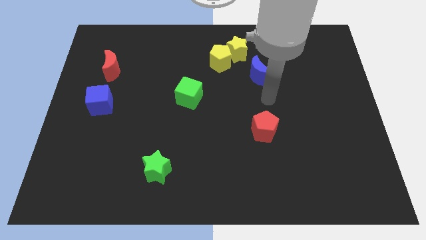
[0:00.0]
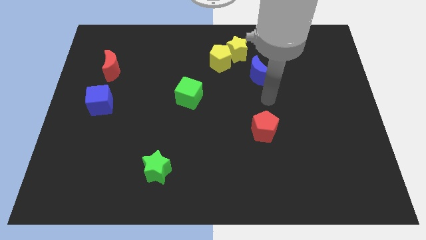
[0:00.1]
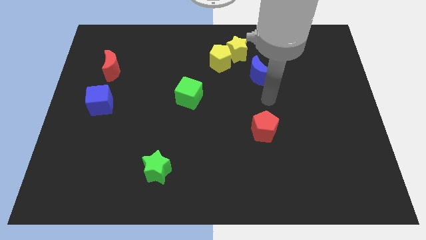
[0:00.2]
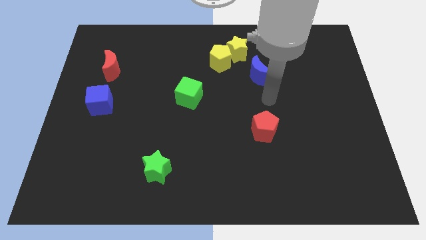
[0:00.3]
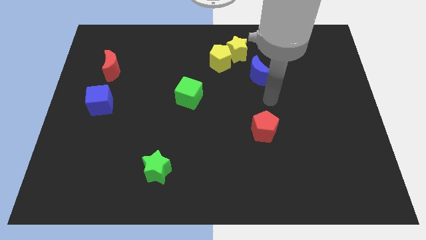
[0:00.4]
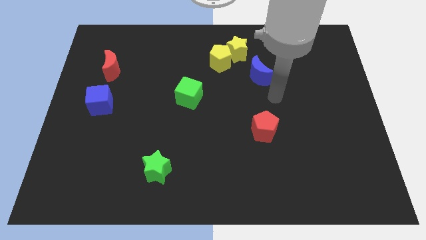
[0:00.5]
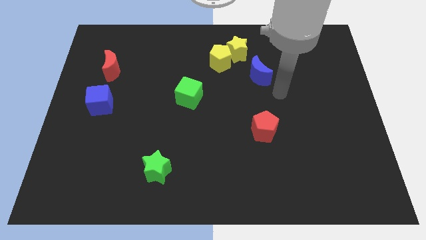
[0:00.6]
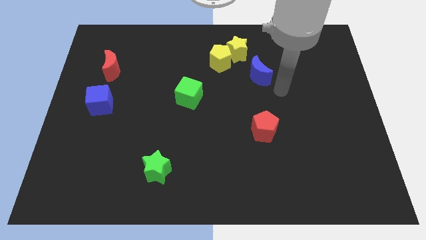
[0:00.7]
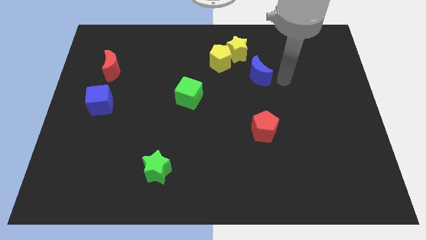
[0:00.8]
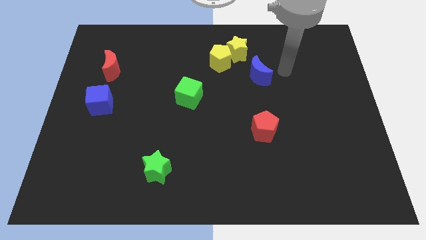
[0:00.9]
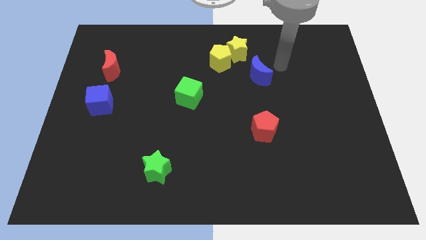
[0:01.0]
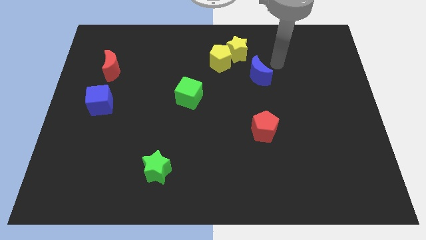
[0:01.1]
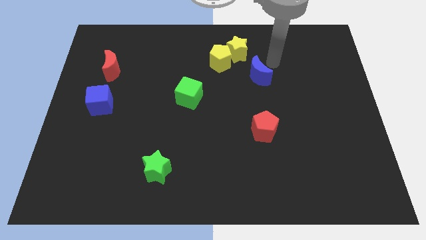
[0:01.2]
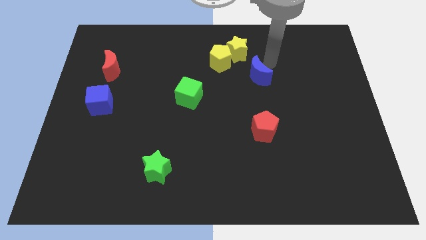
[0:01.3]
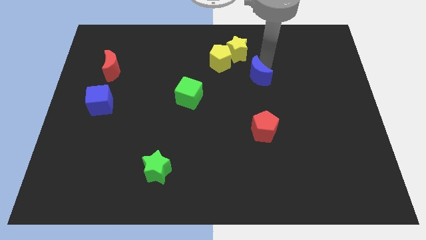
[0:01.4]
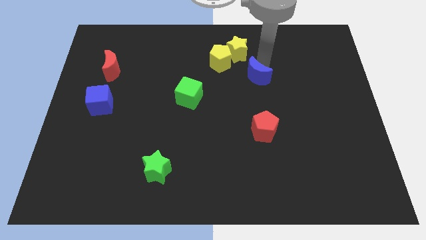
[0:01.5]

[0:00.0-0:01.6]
point your arm above blue moon

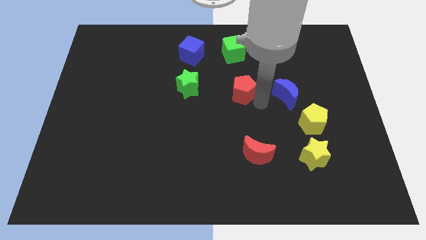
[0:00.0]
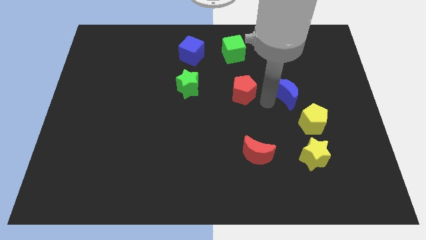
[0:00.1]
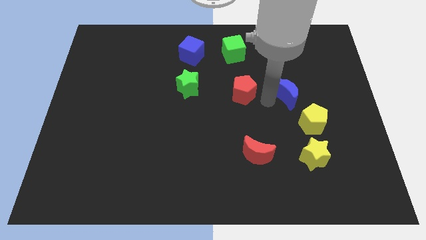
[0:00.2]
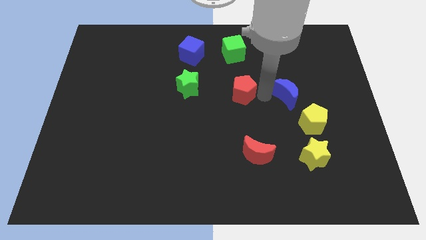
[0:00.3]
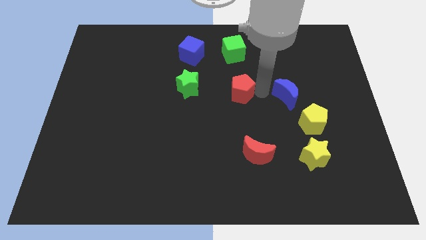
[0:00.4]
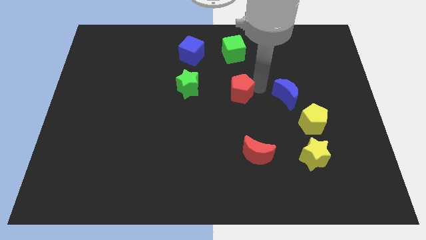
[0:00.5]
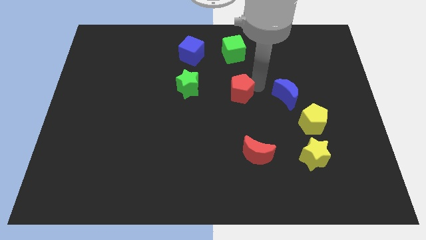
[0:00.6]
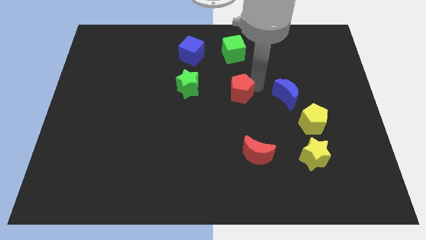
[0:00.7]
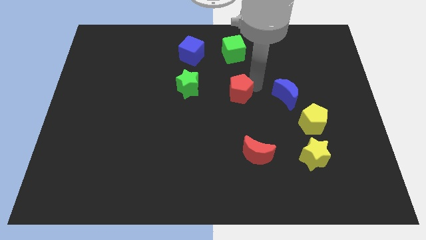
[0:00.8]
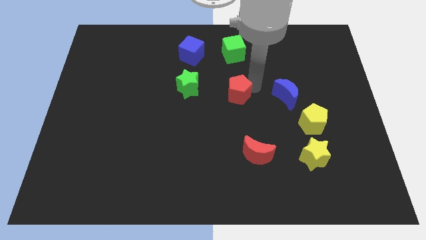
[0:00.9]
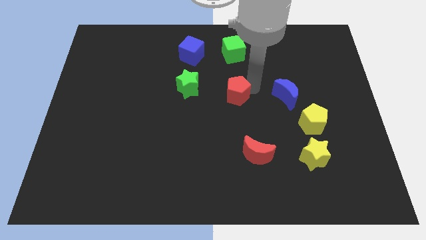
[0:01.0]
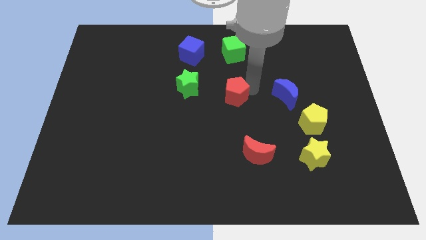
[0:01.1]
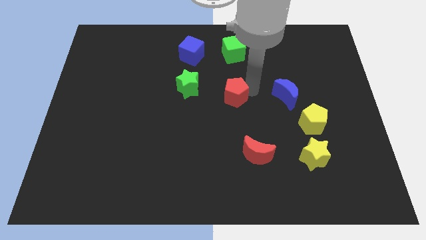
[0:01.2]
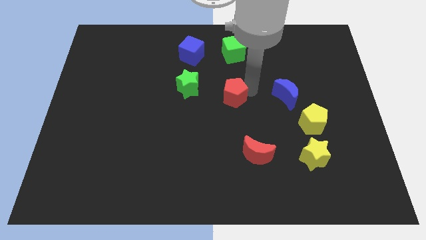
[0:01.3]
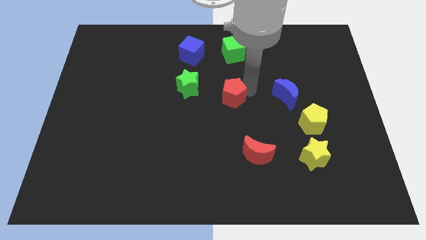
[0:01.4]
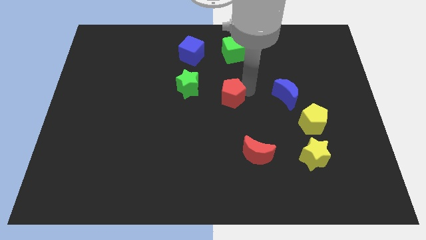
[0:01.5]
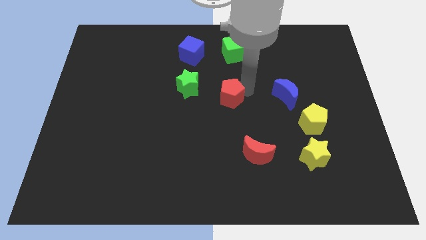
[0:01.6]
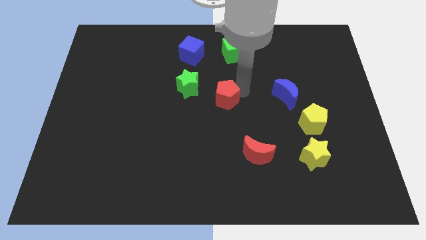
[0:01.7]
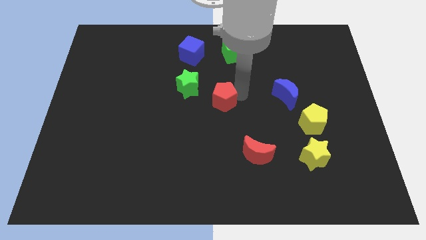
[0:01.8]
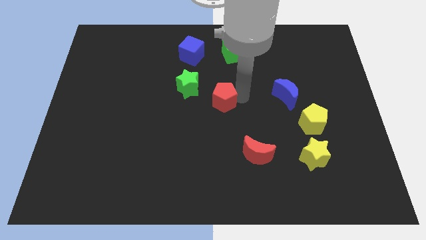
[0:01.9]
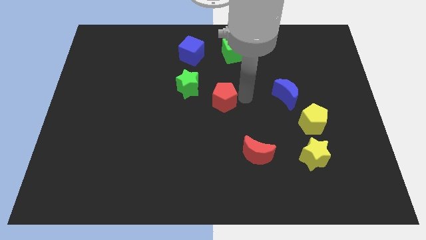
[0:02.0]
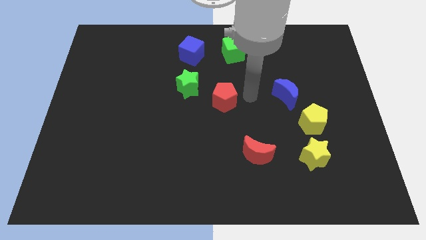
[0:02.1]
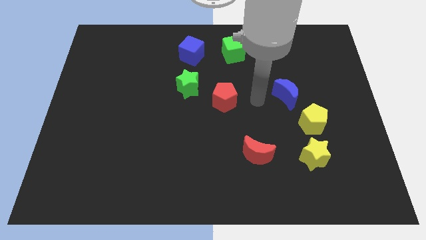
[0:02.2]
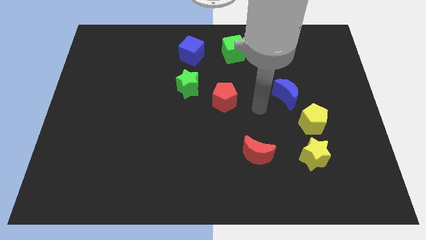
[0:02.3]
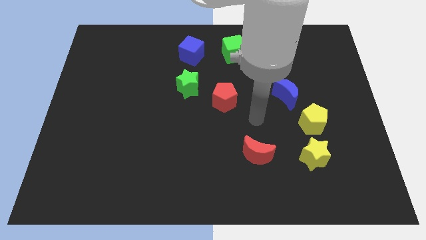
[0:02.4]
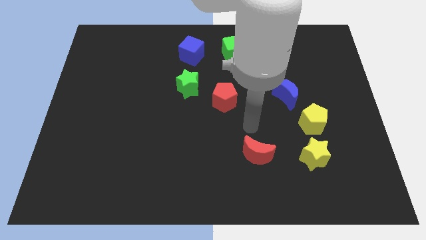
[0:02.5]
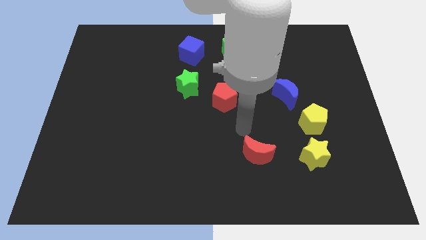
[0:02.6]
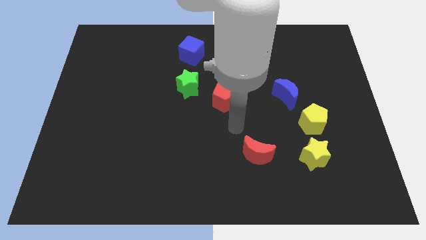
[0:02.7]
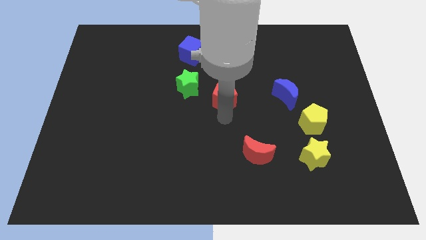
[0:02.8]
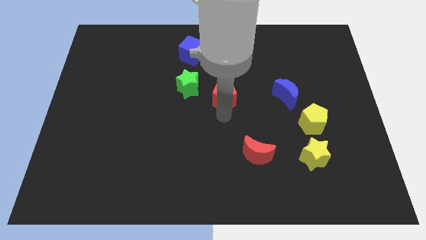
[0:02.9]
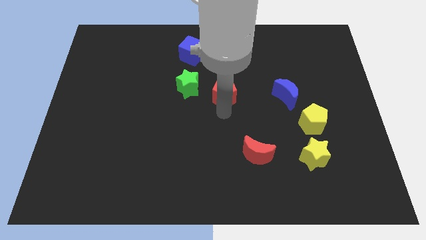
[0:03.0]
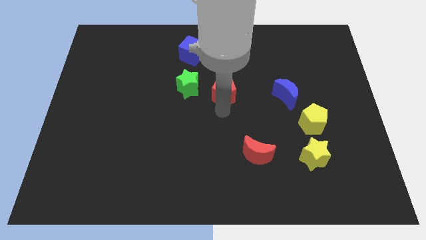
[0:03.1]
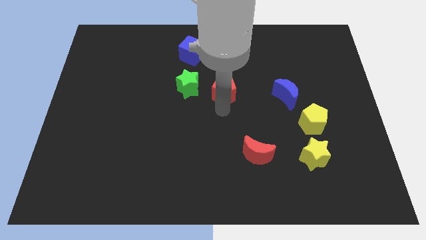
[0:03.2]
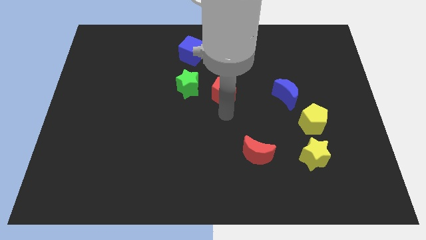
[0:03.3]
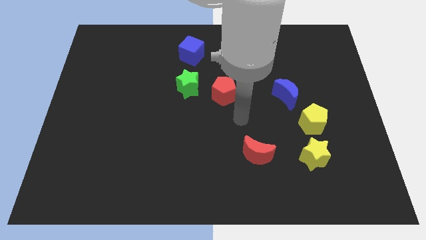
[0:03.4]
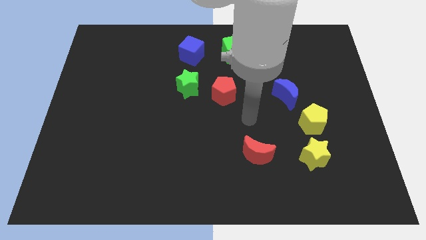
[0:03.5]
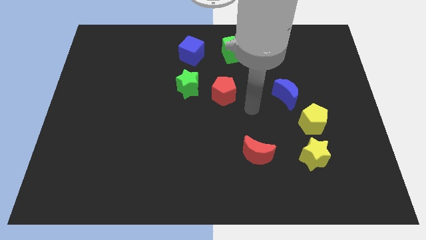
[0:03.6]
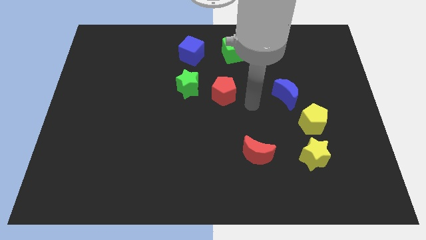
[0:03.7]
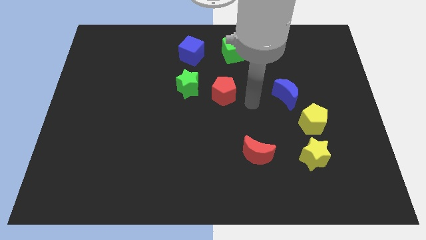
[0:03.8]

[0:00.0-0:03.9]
move the red pentagon to the right of the green star

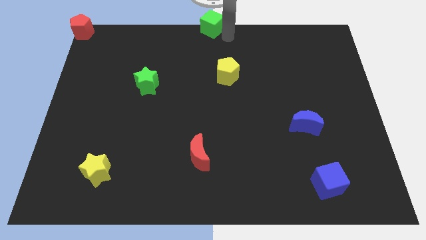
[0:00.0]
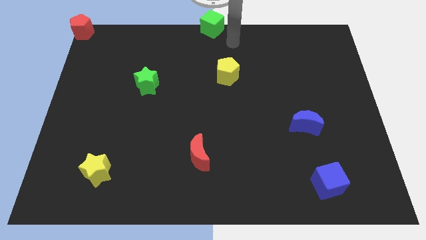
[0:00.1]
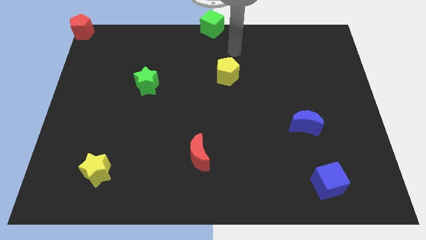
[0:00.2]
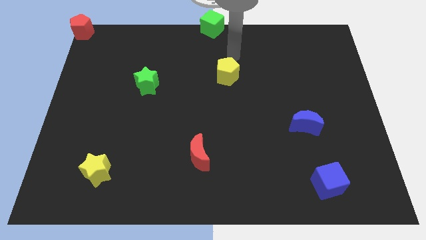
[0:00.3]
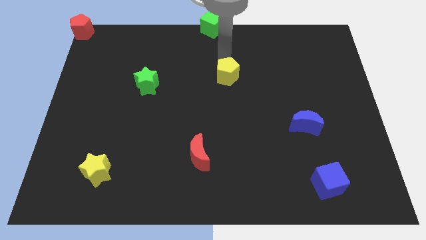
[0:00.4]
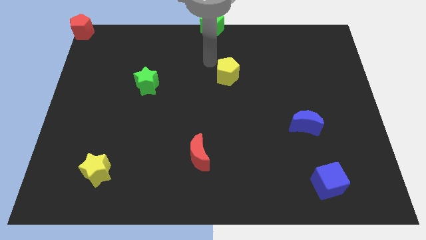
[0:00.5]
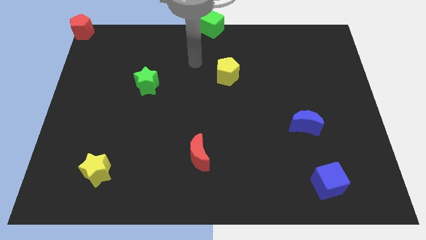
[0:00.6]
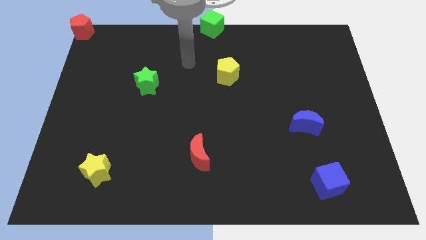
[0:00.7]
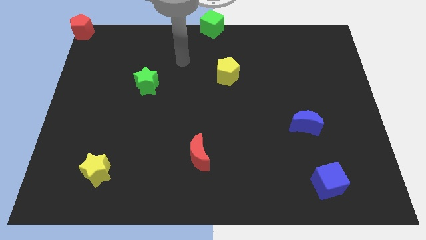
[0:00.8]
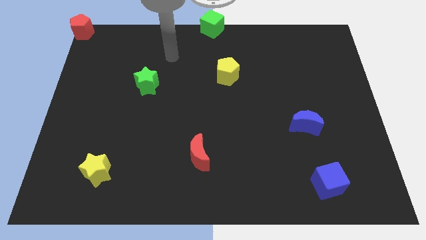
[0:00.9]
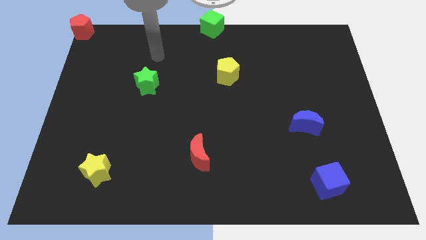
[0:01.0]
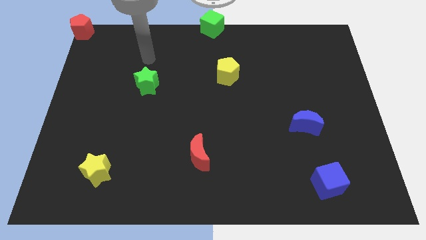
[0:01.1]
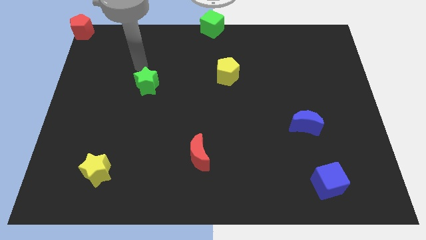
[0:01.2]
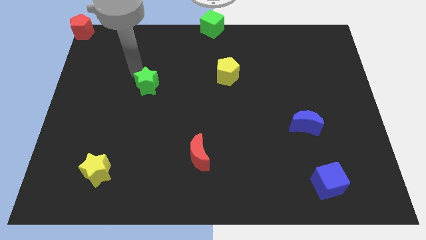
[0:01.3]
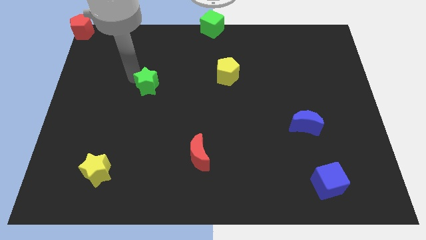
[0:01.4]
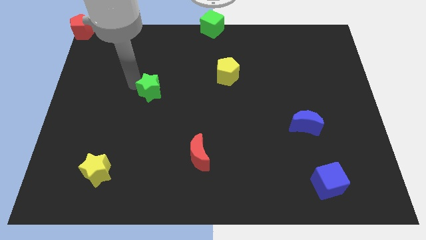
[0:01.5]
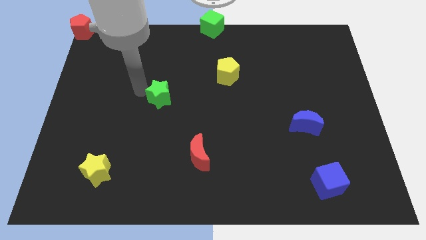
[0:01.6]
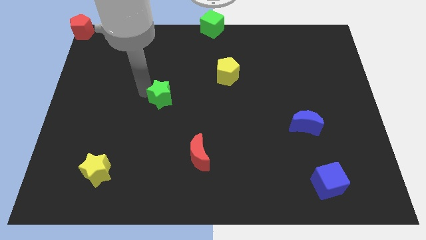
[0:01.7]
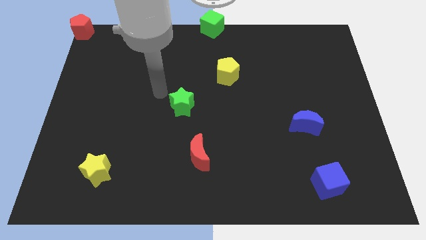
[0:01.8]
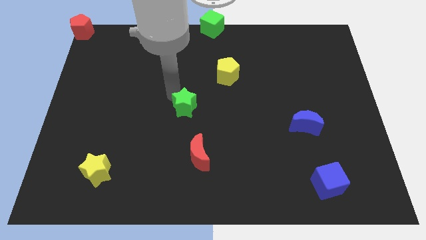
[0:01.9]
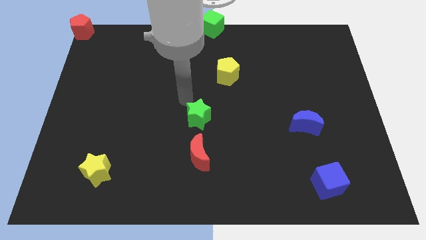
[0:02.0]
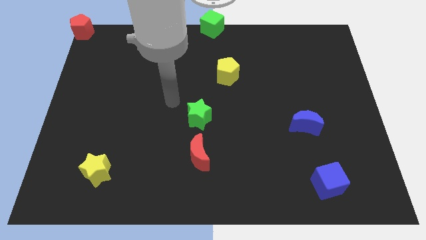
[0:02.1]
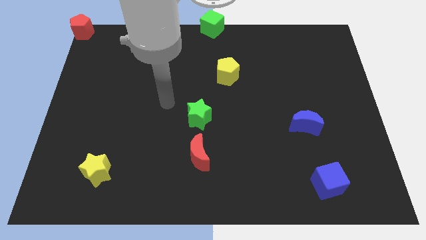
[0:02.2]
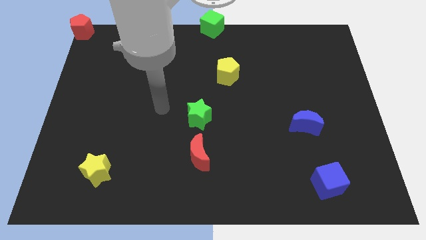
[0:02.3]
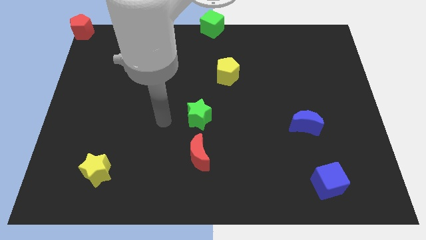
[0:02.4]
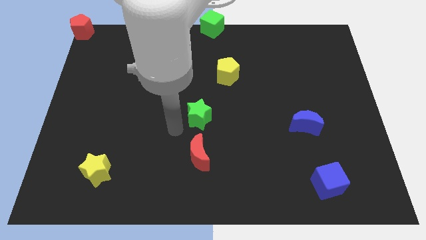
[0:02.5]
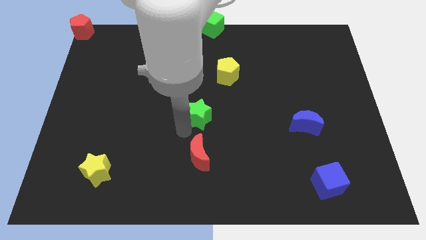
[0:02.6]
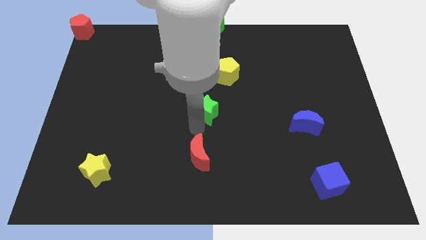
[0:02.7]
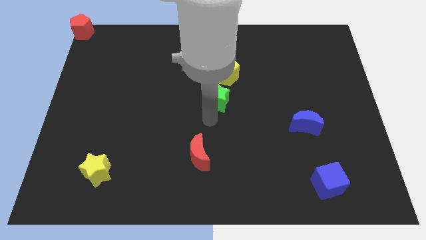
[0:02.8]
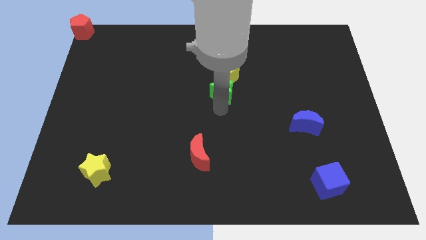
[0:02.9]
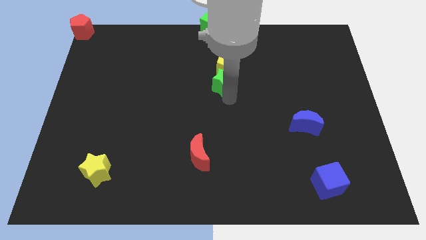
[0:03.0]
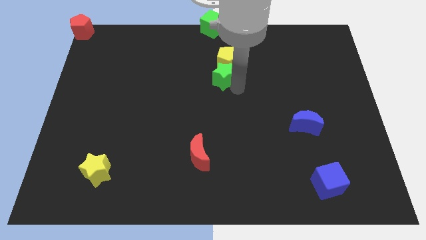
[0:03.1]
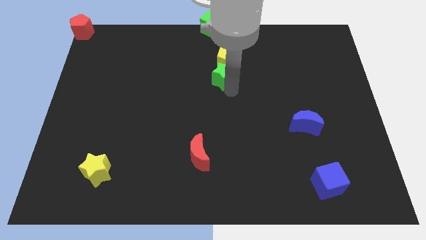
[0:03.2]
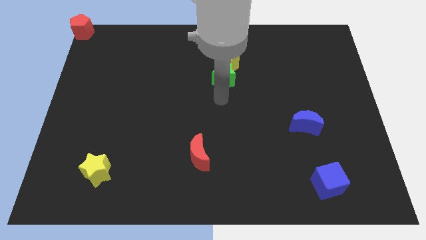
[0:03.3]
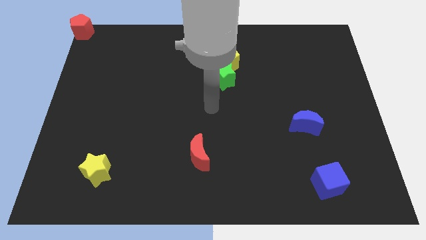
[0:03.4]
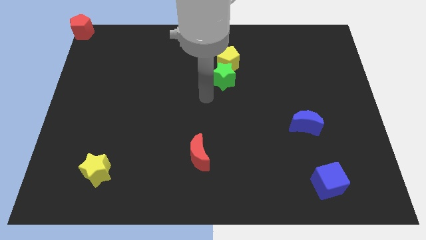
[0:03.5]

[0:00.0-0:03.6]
push the green star into the yellow pentagon
